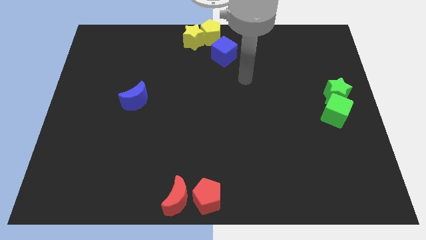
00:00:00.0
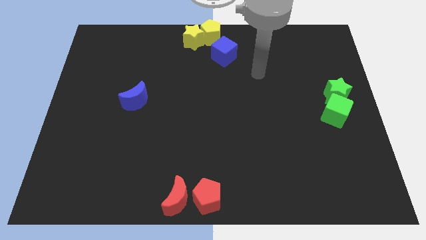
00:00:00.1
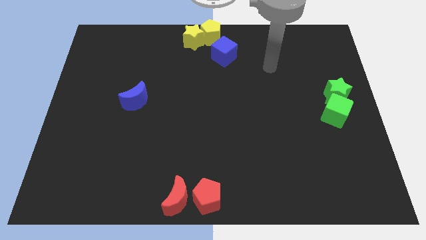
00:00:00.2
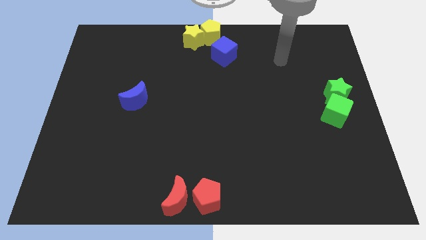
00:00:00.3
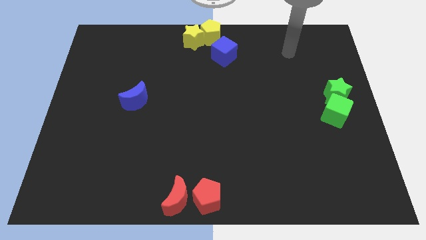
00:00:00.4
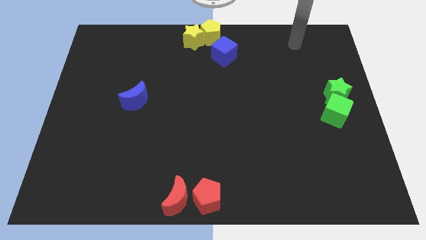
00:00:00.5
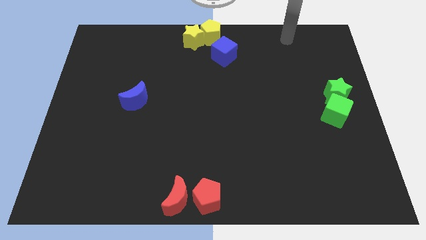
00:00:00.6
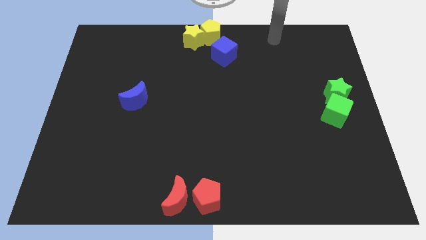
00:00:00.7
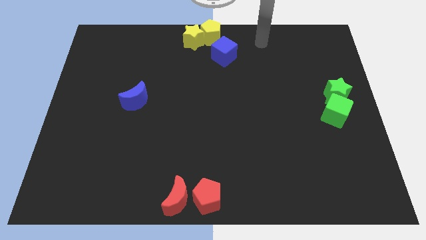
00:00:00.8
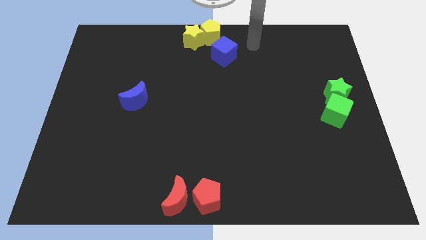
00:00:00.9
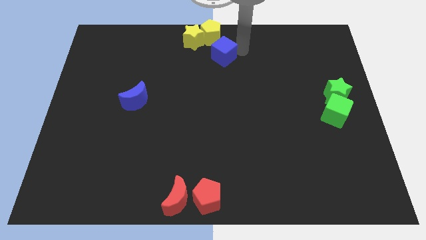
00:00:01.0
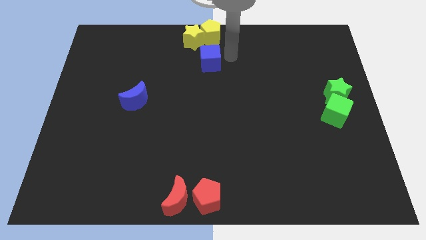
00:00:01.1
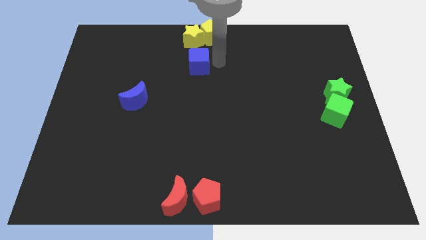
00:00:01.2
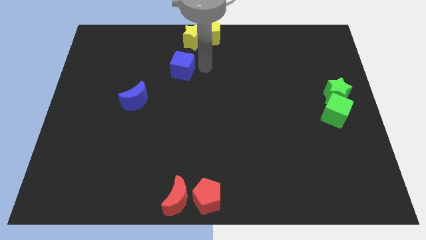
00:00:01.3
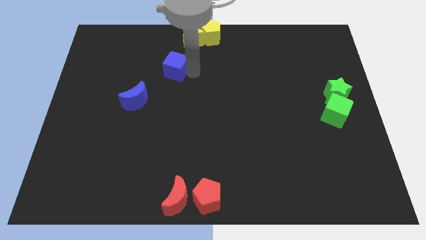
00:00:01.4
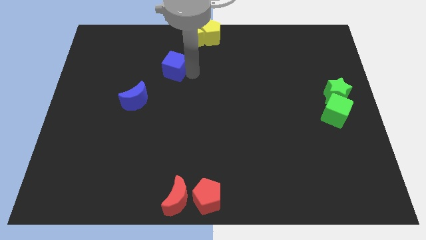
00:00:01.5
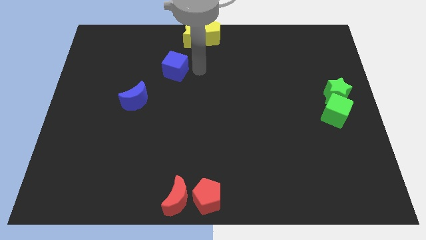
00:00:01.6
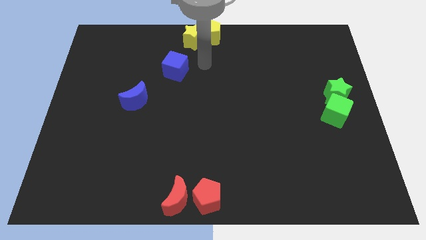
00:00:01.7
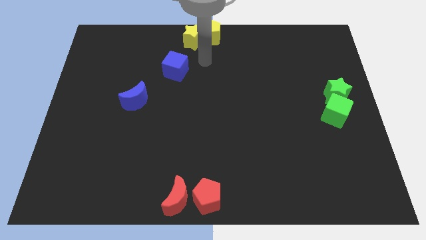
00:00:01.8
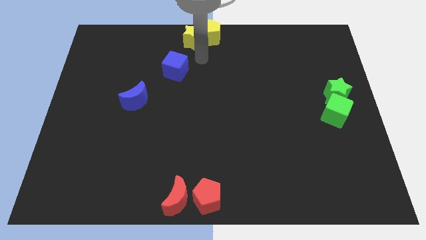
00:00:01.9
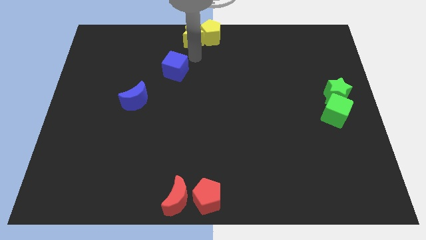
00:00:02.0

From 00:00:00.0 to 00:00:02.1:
separate blue cube from the yellow blocks

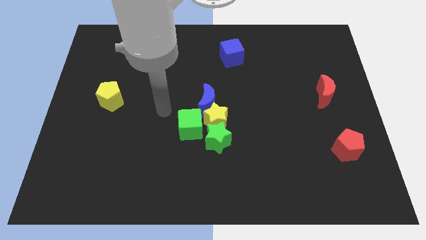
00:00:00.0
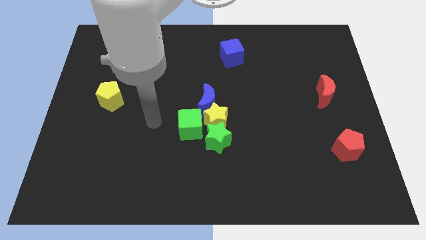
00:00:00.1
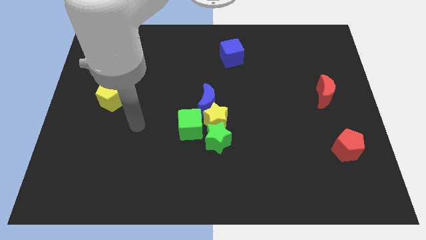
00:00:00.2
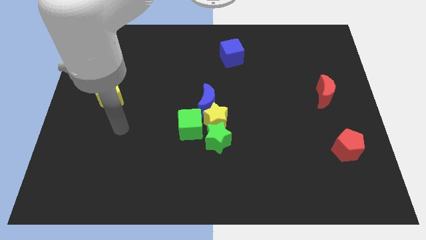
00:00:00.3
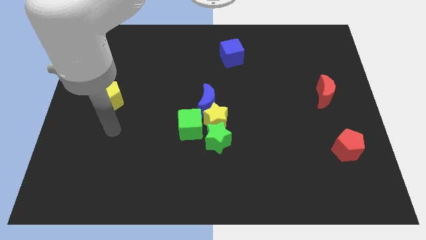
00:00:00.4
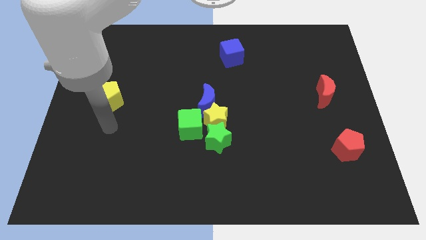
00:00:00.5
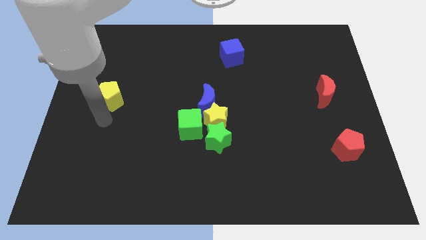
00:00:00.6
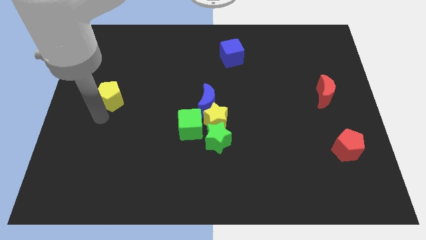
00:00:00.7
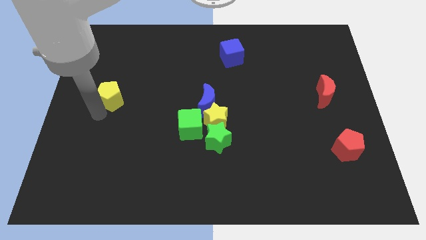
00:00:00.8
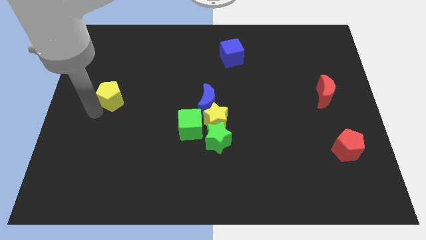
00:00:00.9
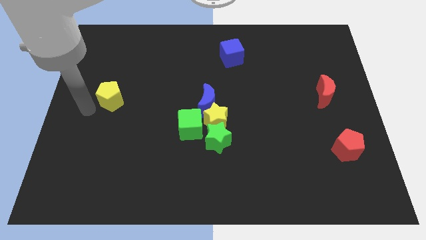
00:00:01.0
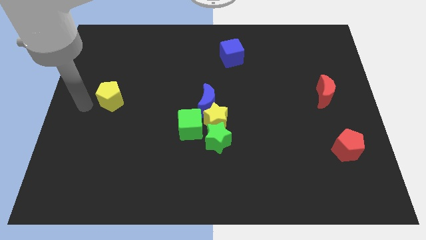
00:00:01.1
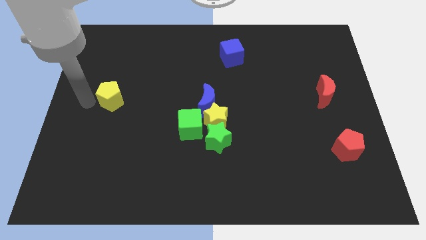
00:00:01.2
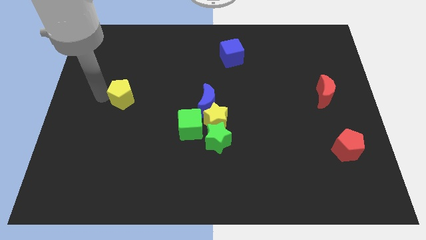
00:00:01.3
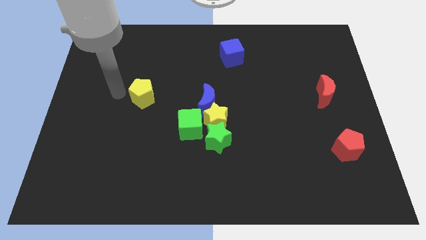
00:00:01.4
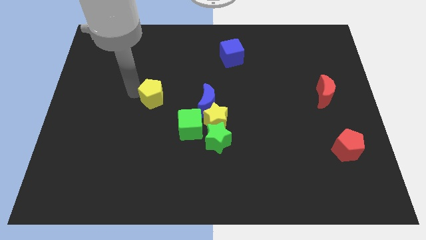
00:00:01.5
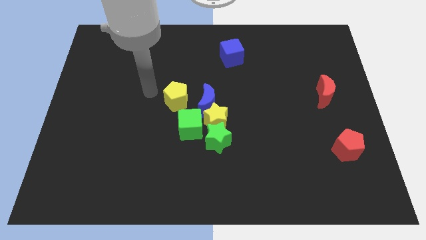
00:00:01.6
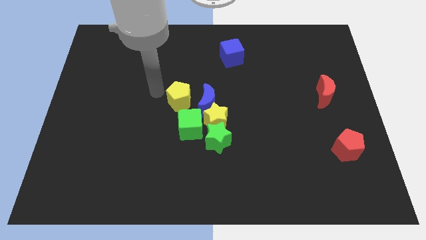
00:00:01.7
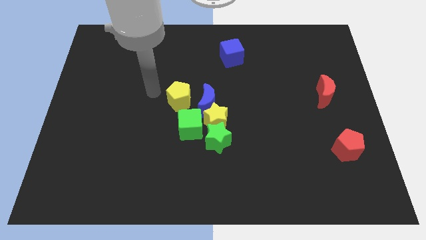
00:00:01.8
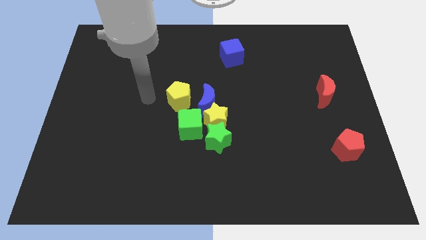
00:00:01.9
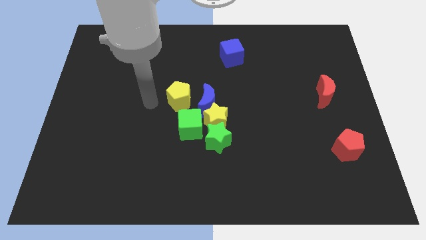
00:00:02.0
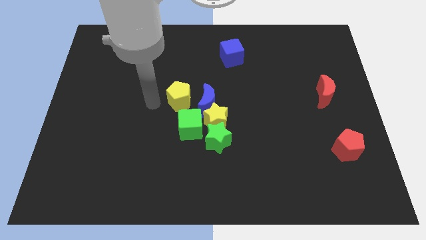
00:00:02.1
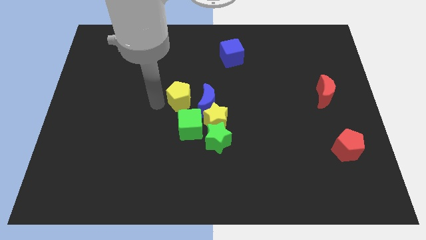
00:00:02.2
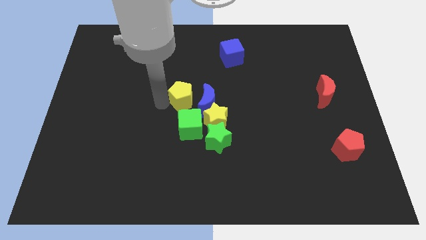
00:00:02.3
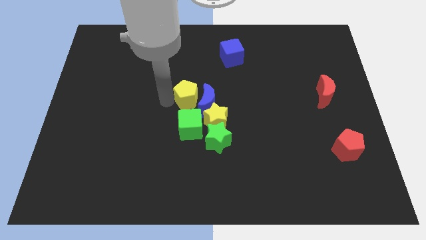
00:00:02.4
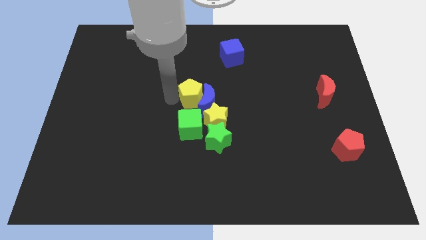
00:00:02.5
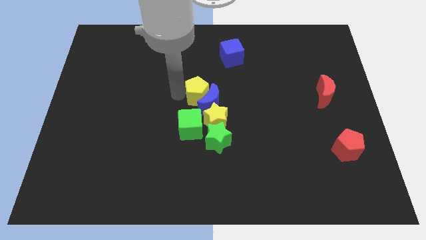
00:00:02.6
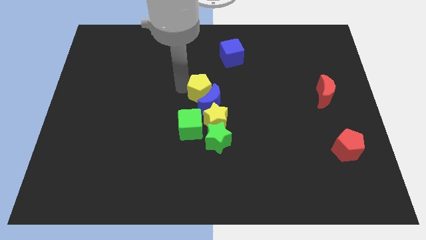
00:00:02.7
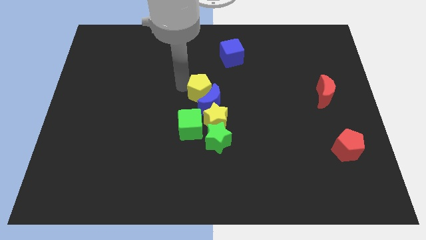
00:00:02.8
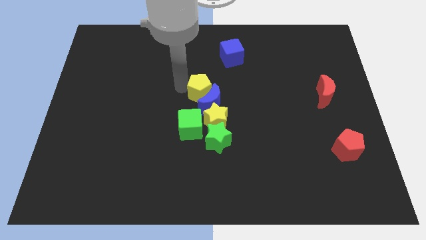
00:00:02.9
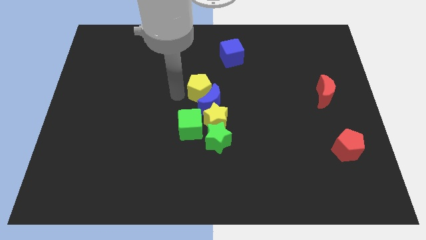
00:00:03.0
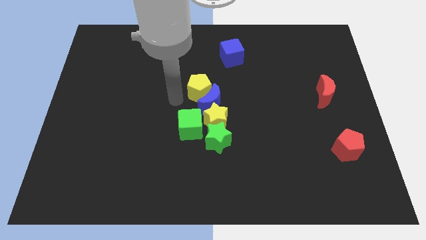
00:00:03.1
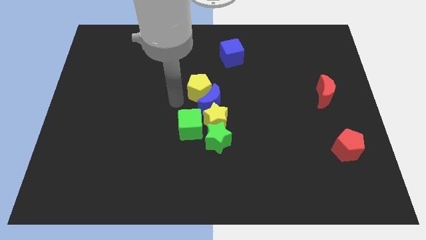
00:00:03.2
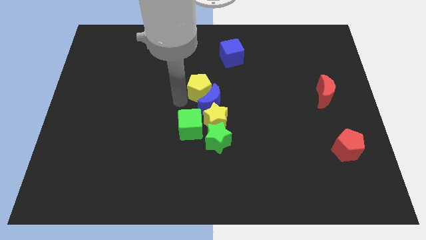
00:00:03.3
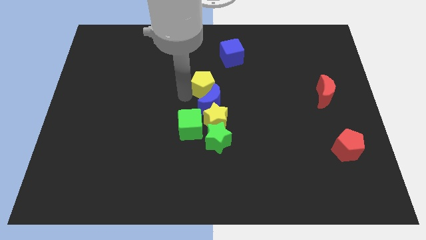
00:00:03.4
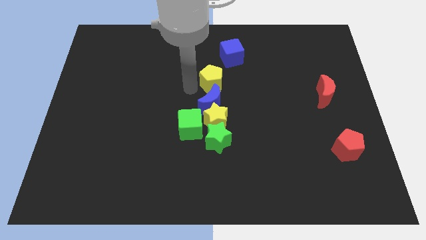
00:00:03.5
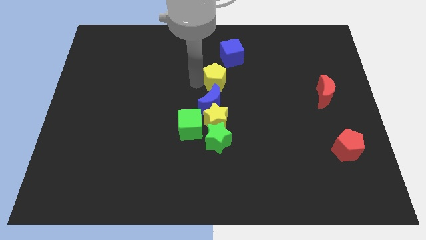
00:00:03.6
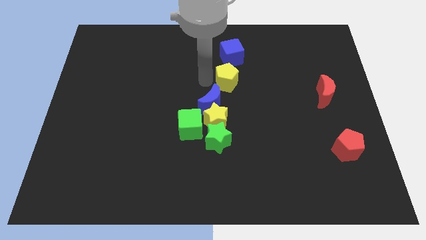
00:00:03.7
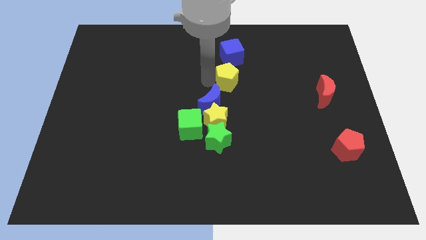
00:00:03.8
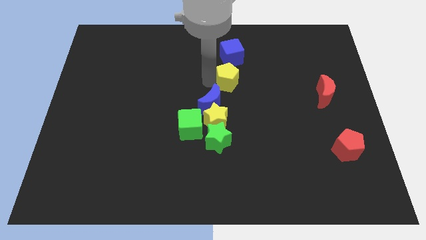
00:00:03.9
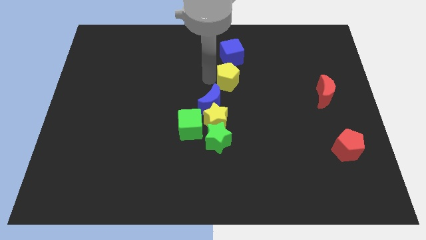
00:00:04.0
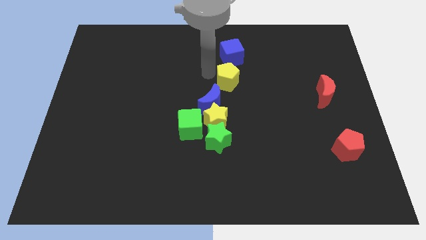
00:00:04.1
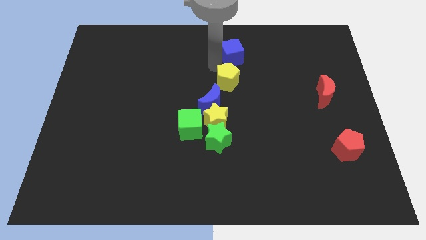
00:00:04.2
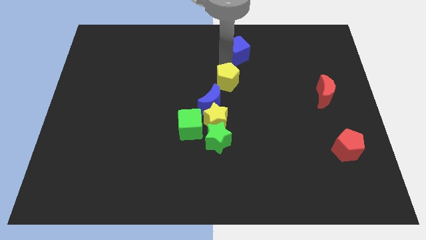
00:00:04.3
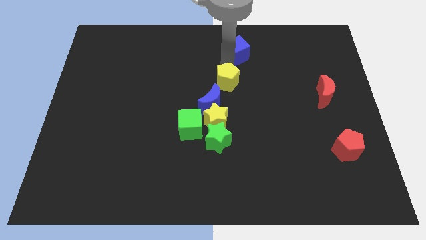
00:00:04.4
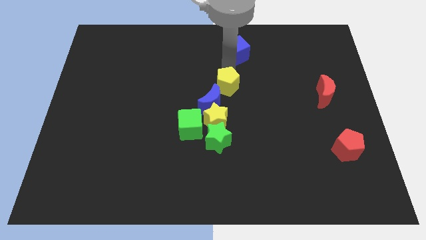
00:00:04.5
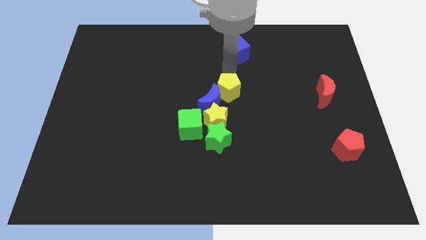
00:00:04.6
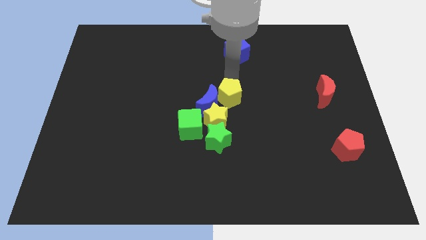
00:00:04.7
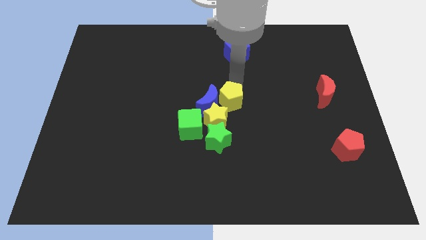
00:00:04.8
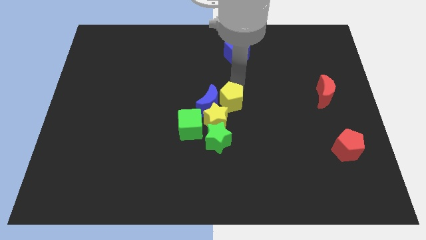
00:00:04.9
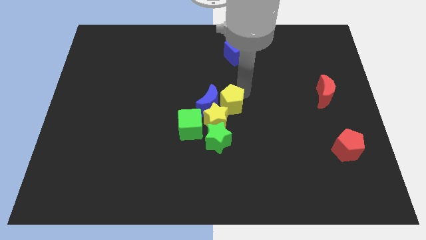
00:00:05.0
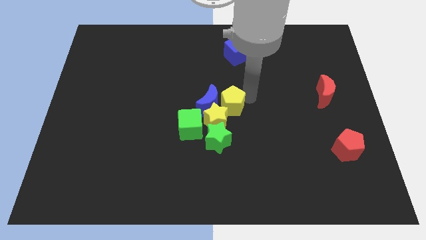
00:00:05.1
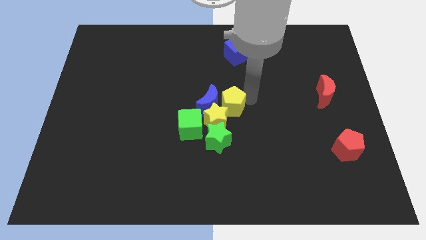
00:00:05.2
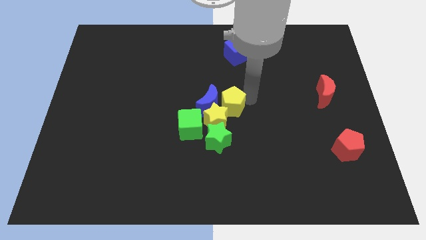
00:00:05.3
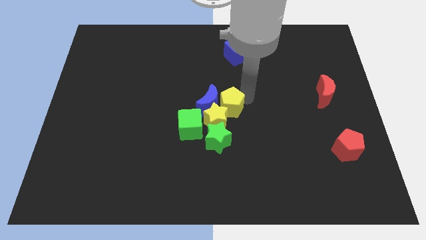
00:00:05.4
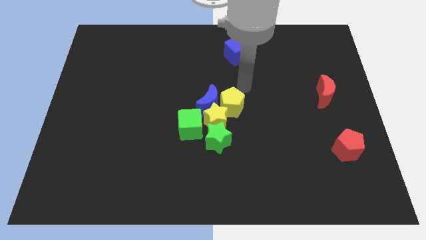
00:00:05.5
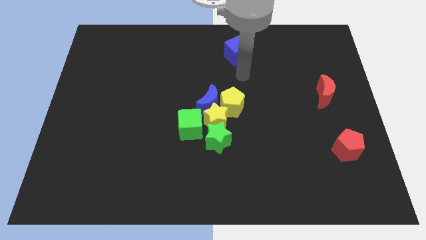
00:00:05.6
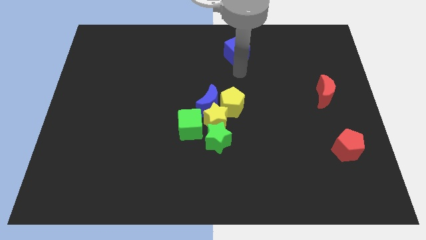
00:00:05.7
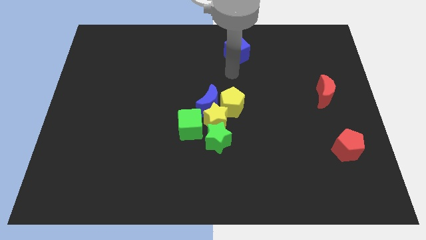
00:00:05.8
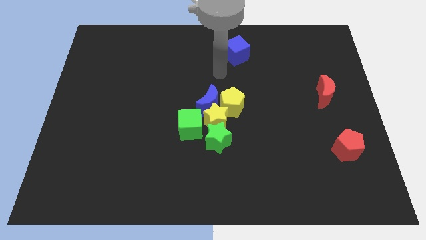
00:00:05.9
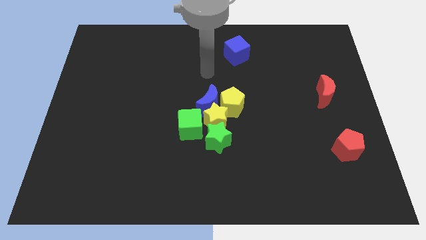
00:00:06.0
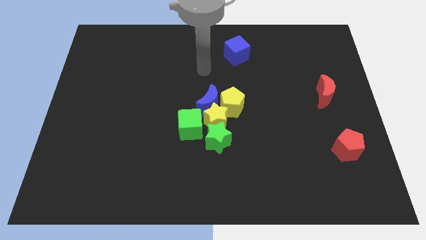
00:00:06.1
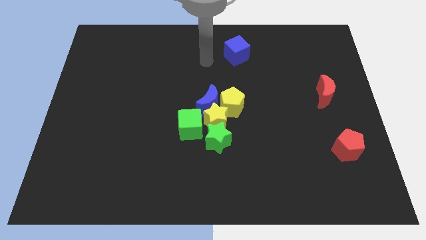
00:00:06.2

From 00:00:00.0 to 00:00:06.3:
move the yellow pentagon to the center of the board

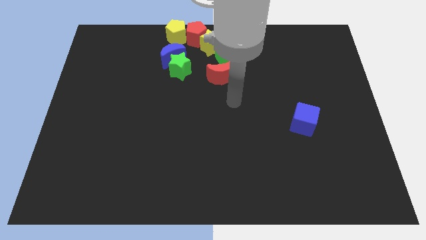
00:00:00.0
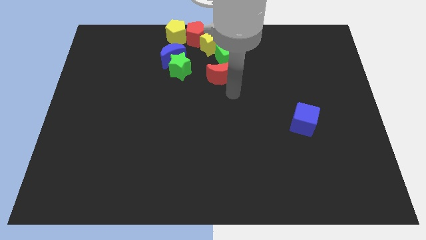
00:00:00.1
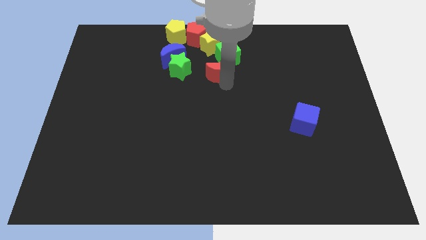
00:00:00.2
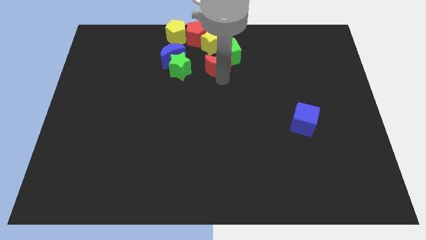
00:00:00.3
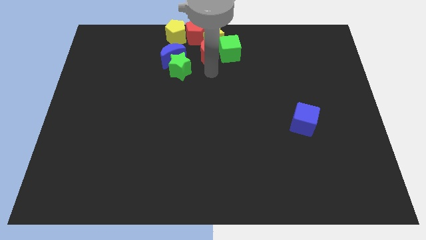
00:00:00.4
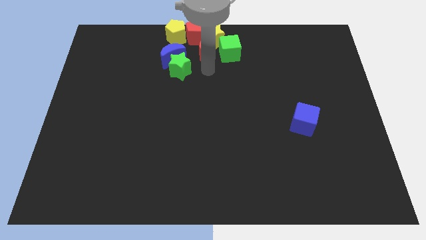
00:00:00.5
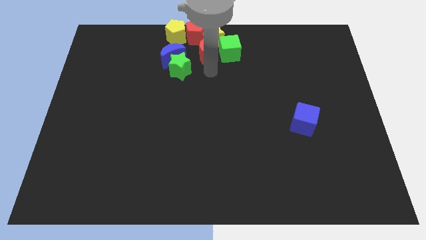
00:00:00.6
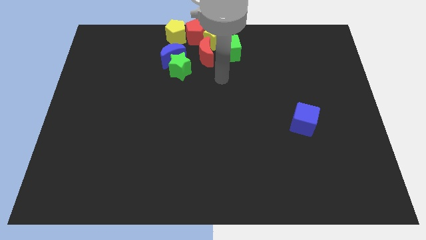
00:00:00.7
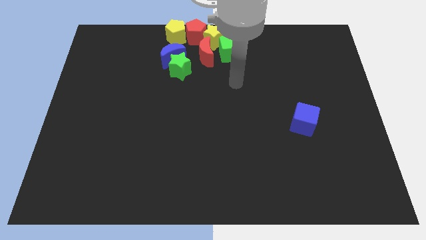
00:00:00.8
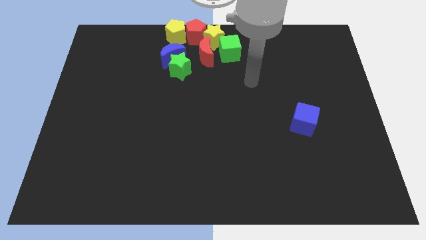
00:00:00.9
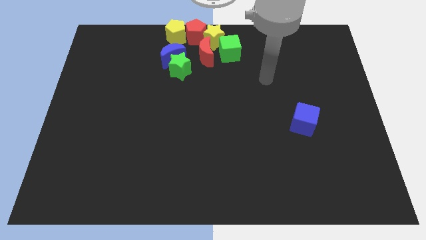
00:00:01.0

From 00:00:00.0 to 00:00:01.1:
push the red moon into yellow star
